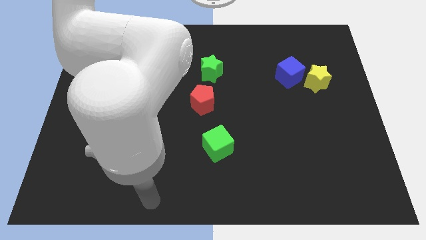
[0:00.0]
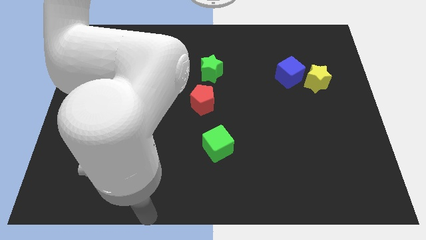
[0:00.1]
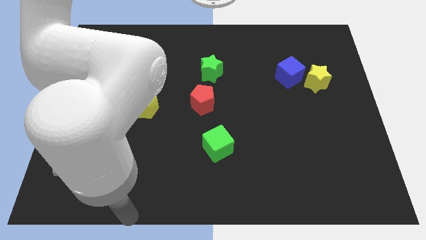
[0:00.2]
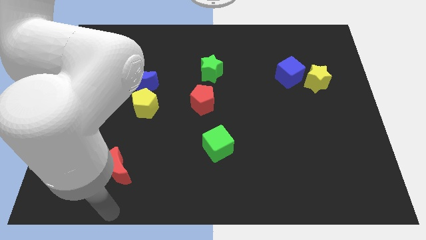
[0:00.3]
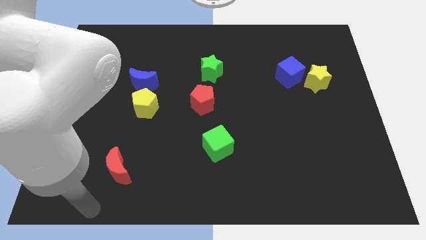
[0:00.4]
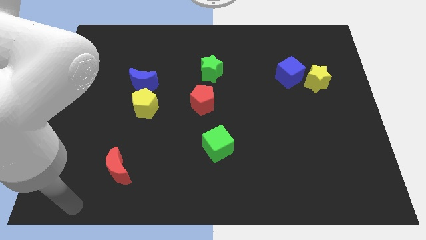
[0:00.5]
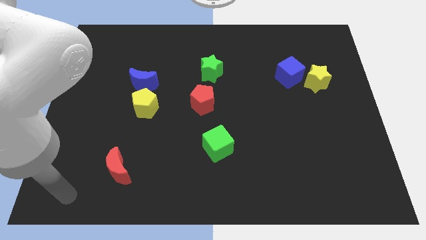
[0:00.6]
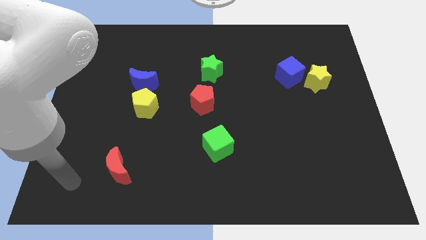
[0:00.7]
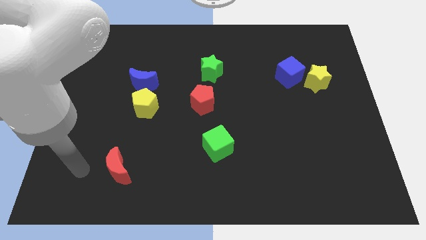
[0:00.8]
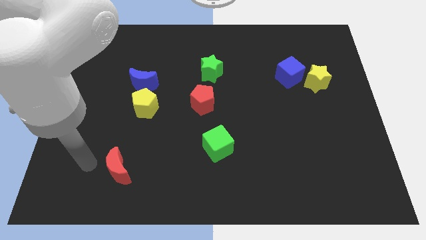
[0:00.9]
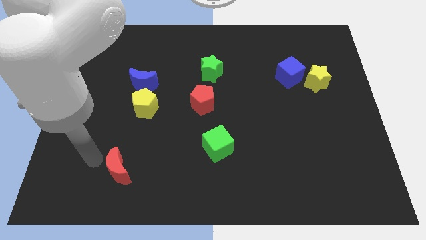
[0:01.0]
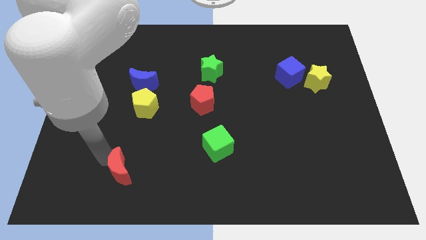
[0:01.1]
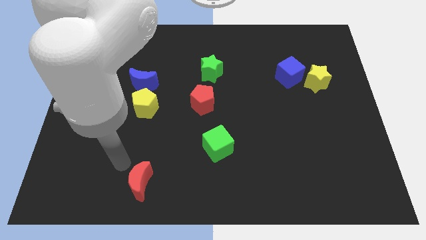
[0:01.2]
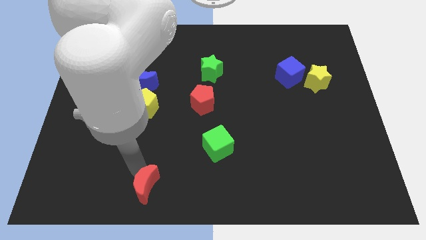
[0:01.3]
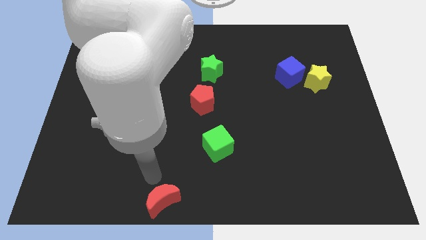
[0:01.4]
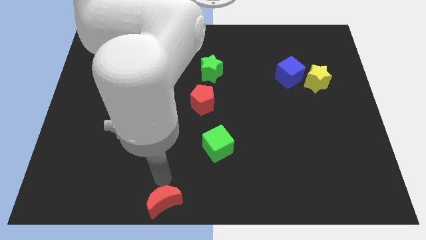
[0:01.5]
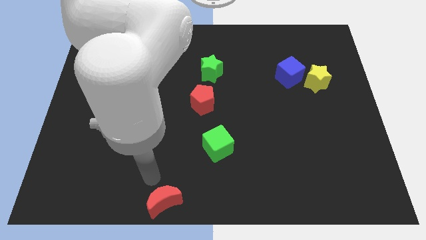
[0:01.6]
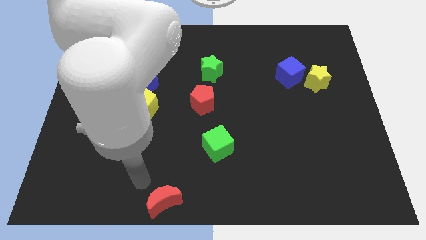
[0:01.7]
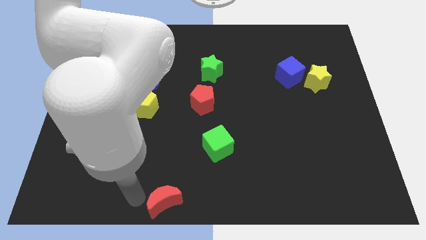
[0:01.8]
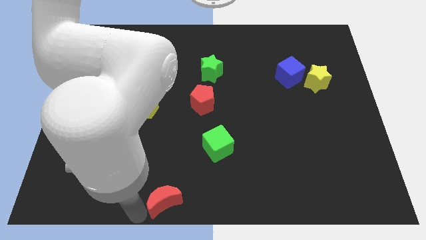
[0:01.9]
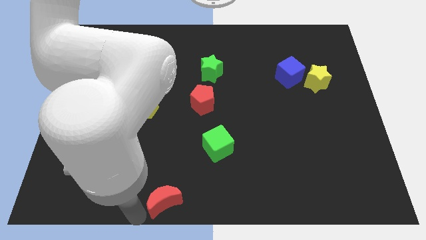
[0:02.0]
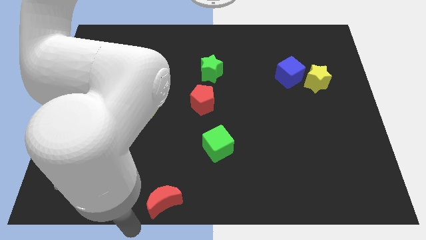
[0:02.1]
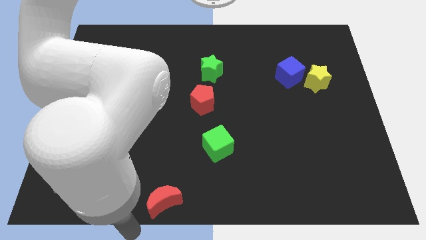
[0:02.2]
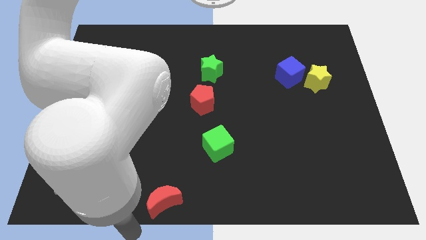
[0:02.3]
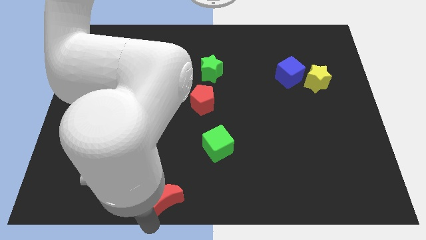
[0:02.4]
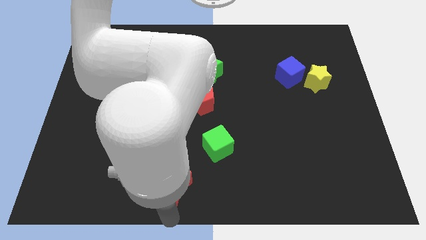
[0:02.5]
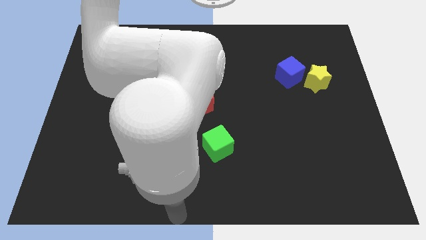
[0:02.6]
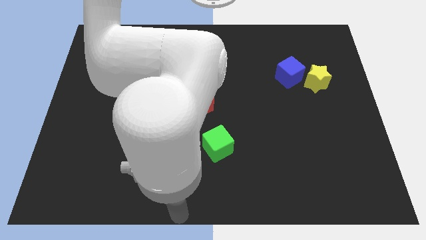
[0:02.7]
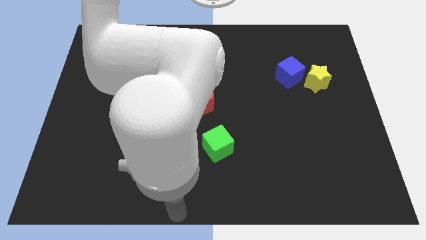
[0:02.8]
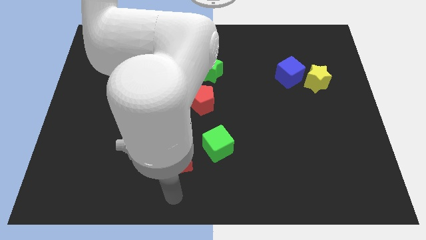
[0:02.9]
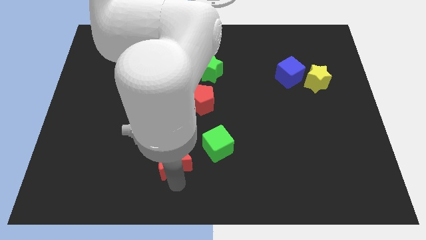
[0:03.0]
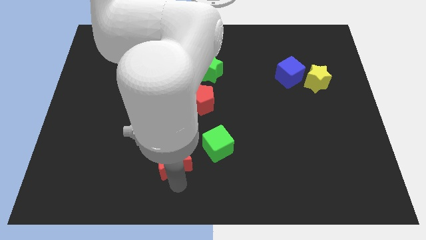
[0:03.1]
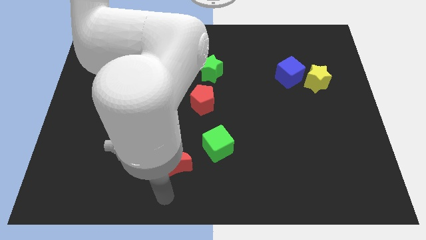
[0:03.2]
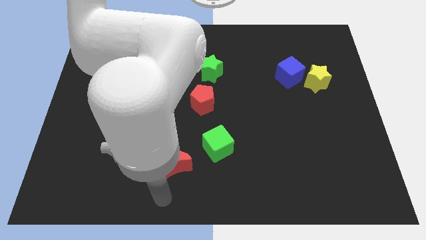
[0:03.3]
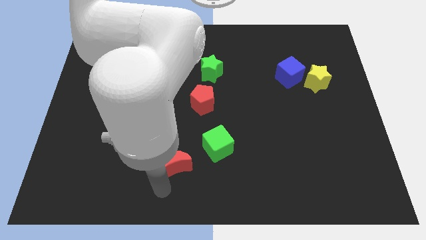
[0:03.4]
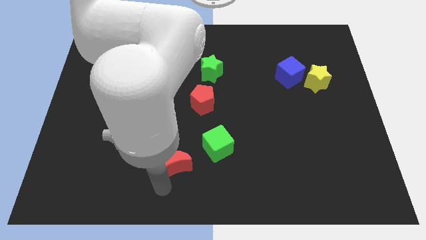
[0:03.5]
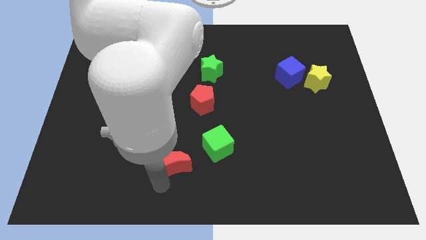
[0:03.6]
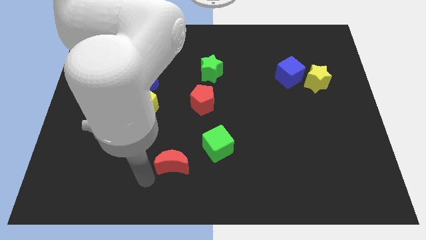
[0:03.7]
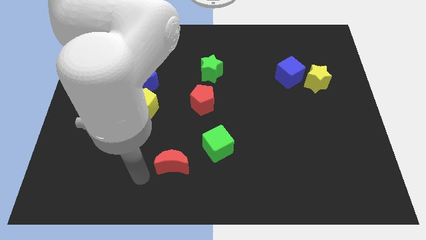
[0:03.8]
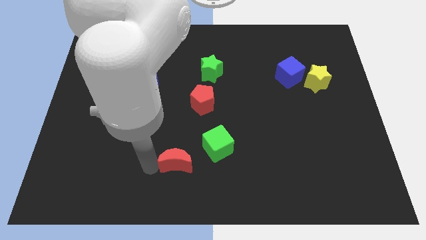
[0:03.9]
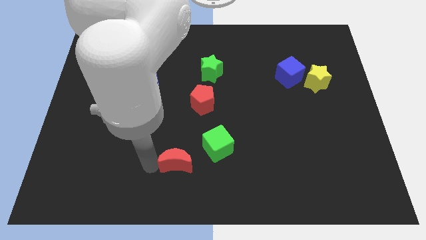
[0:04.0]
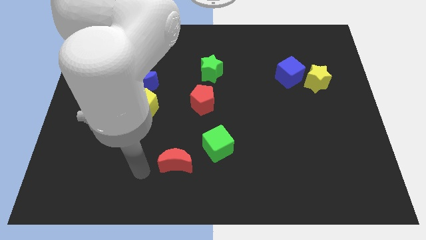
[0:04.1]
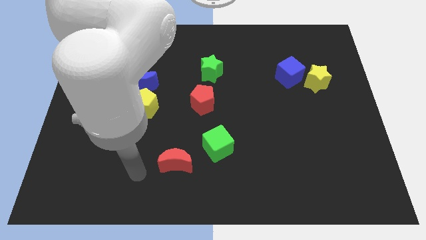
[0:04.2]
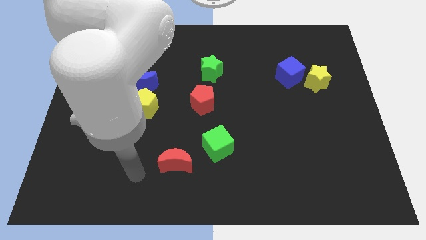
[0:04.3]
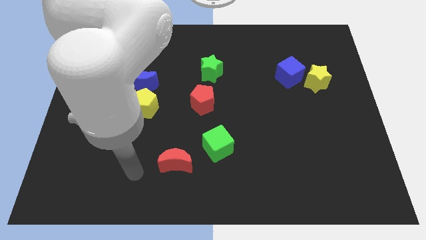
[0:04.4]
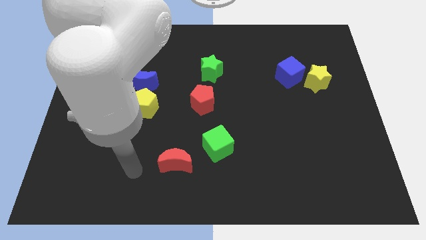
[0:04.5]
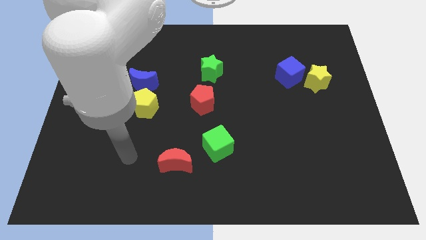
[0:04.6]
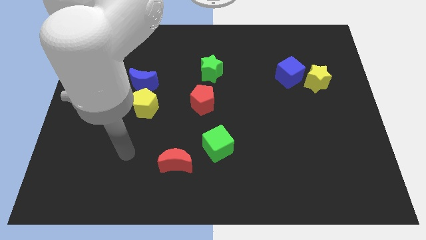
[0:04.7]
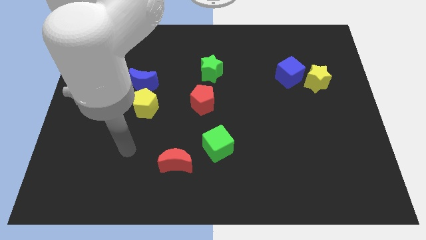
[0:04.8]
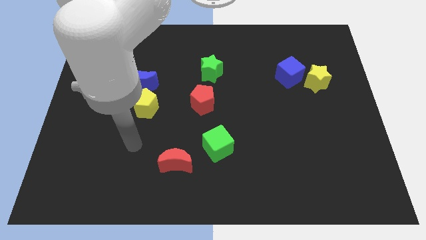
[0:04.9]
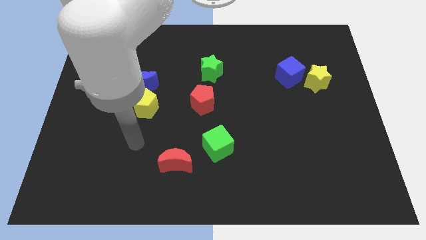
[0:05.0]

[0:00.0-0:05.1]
slide the red moon diagonally to the green cube

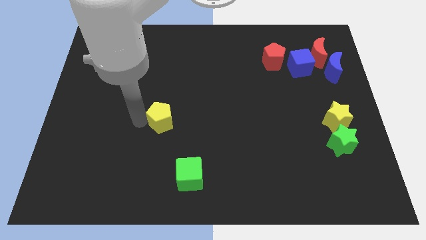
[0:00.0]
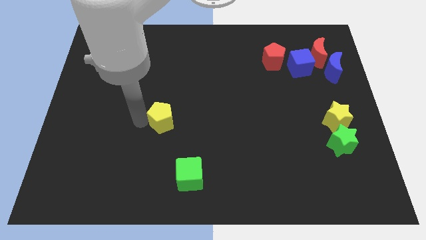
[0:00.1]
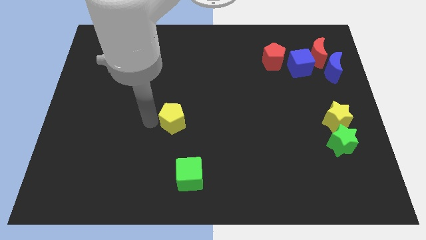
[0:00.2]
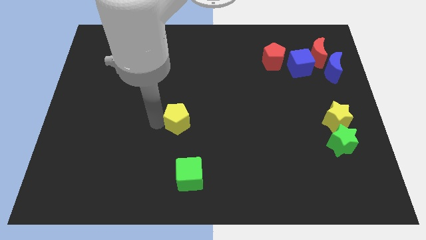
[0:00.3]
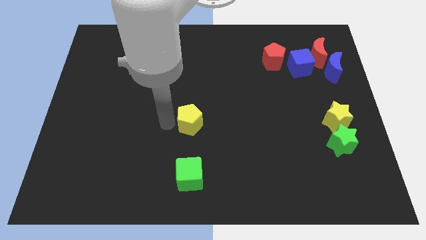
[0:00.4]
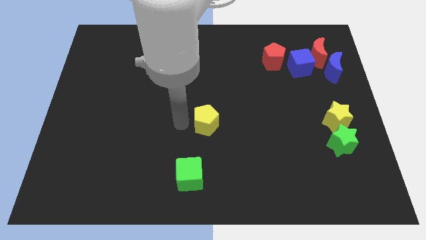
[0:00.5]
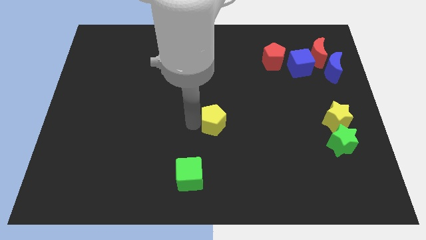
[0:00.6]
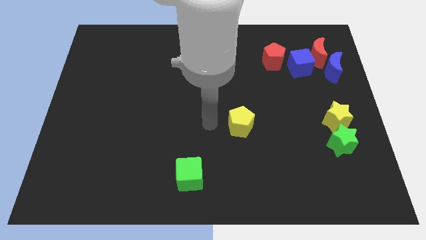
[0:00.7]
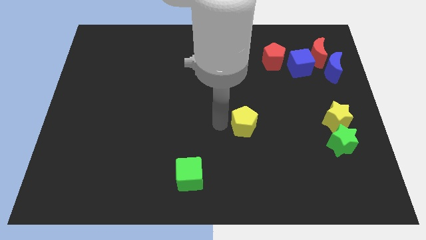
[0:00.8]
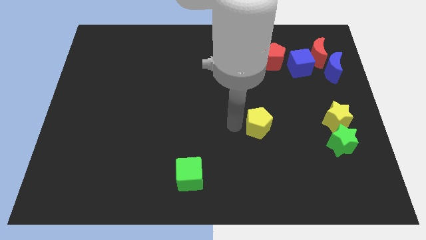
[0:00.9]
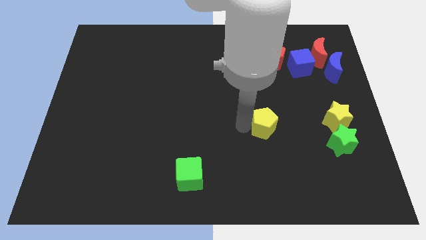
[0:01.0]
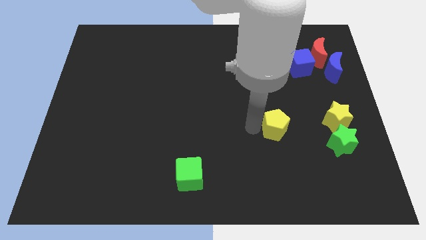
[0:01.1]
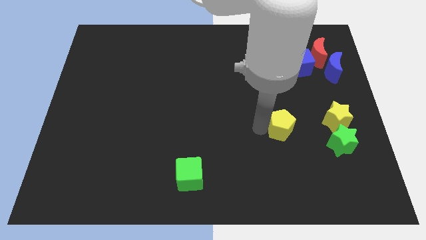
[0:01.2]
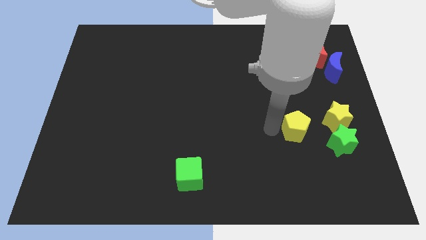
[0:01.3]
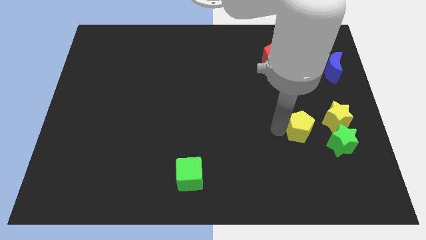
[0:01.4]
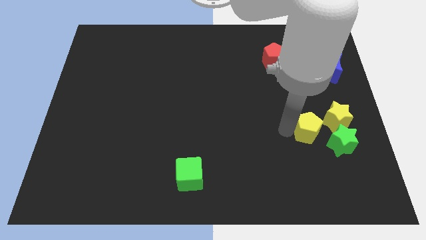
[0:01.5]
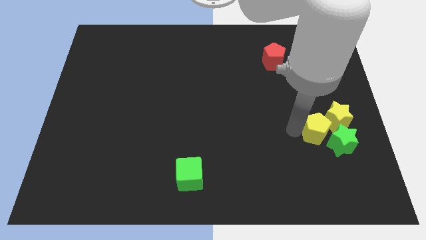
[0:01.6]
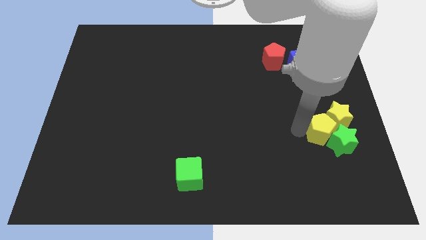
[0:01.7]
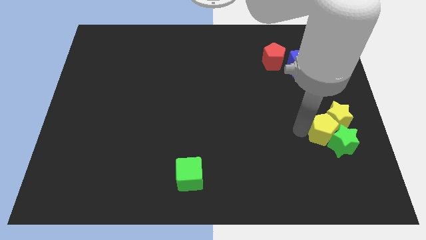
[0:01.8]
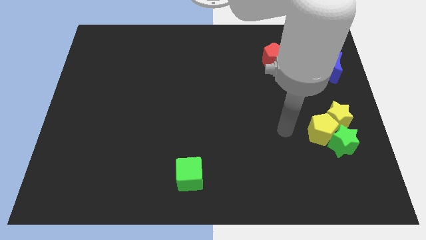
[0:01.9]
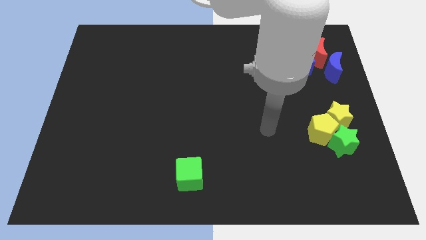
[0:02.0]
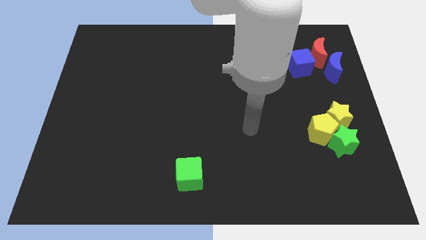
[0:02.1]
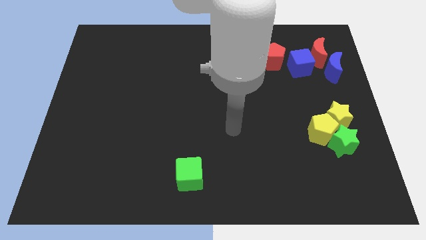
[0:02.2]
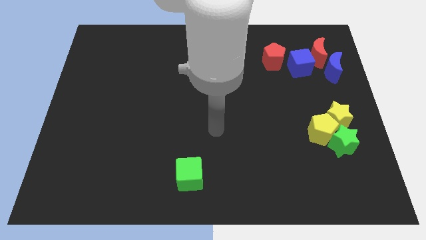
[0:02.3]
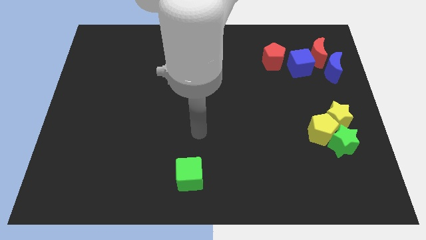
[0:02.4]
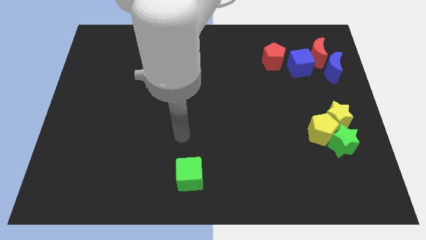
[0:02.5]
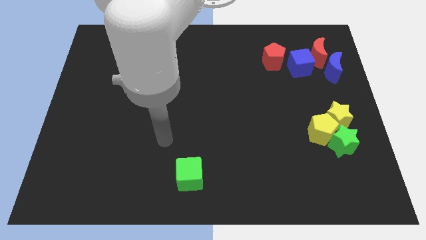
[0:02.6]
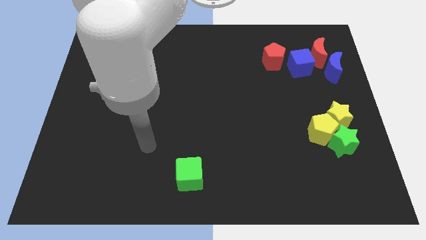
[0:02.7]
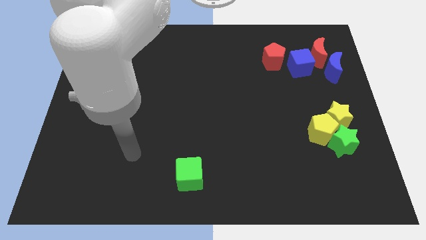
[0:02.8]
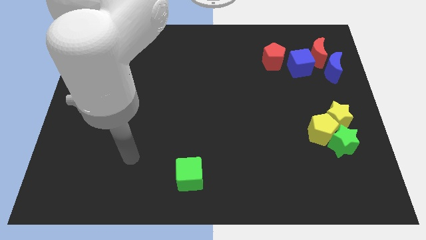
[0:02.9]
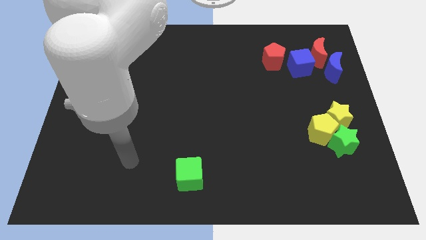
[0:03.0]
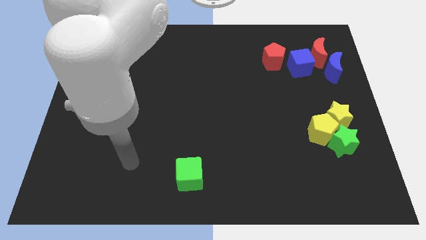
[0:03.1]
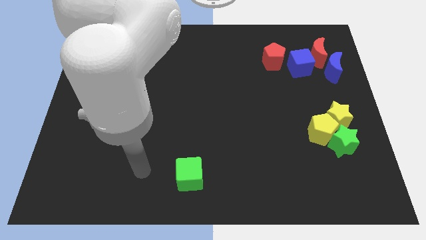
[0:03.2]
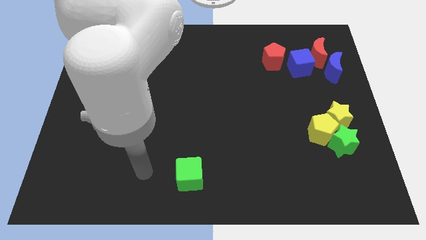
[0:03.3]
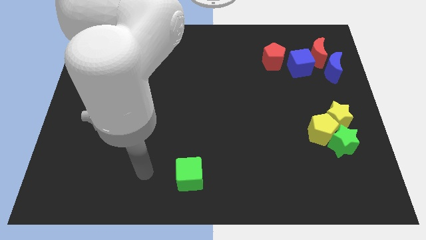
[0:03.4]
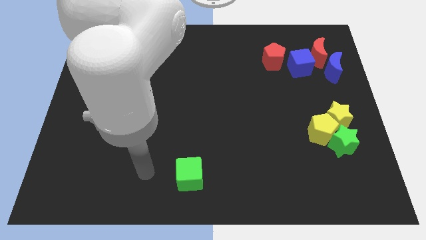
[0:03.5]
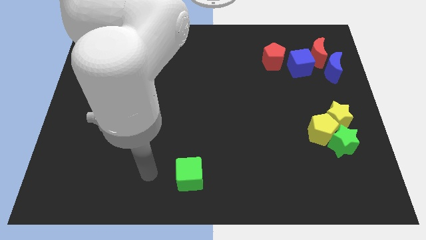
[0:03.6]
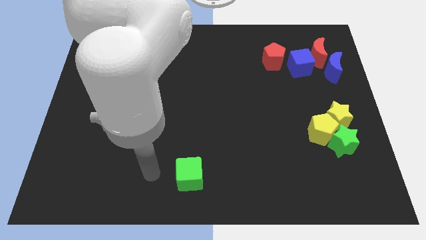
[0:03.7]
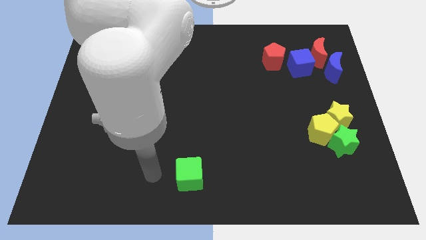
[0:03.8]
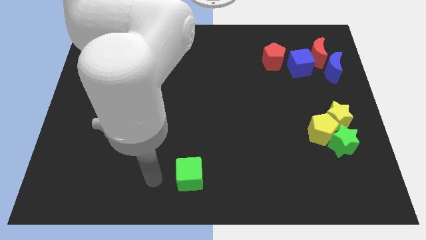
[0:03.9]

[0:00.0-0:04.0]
move yellow pentagon into yellow star
